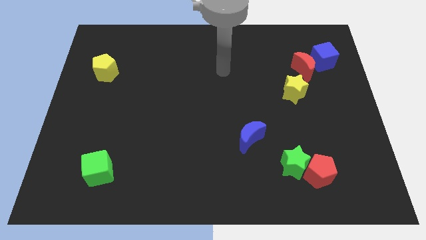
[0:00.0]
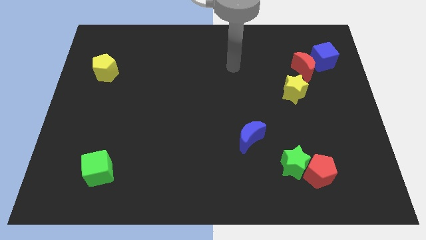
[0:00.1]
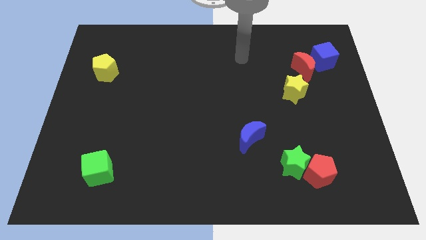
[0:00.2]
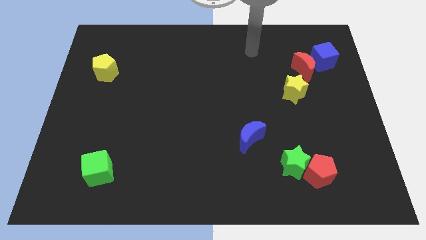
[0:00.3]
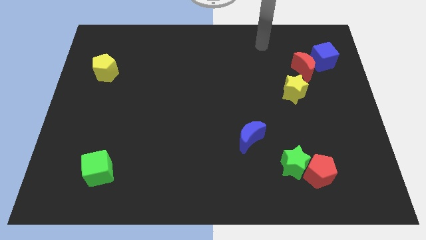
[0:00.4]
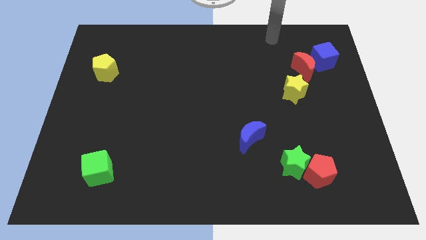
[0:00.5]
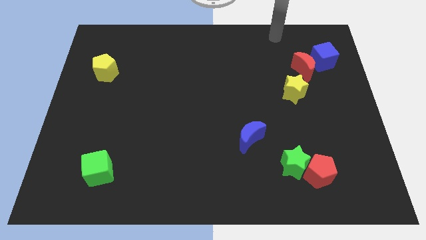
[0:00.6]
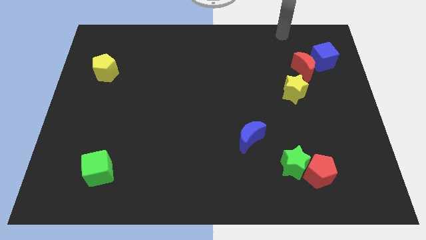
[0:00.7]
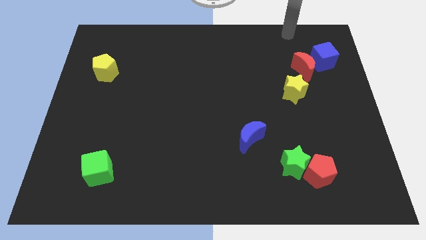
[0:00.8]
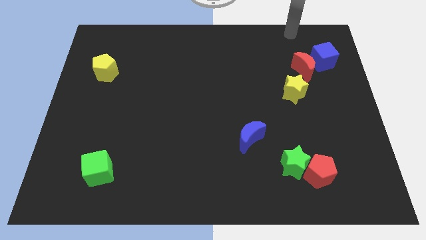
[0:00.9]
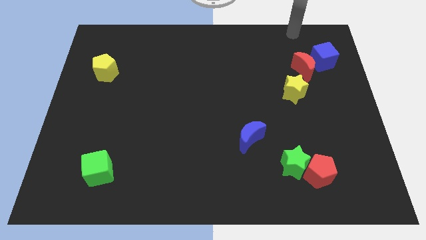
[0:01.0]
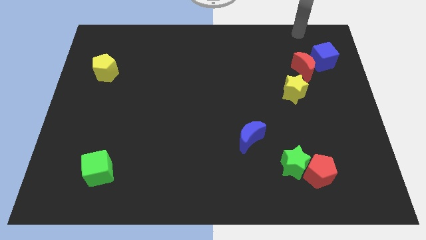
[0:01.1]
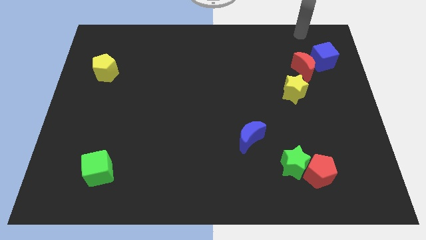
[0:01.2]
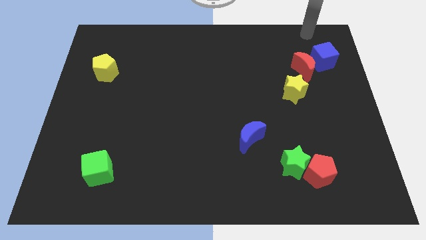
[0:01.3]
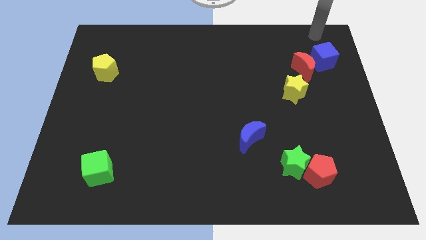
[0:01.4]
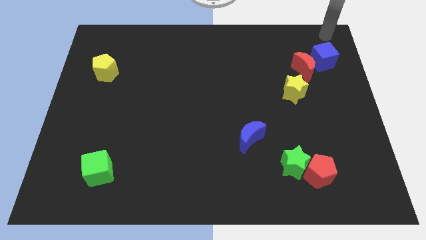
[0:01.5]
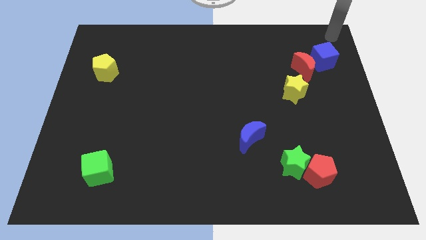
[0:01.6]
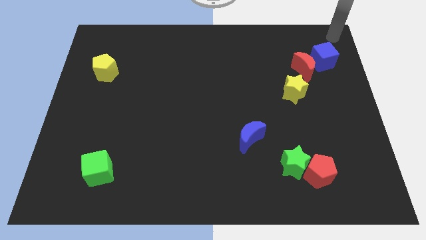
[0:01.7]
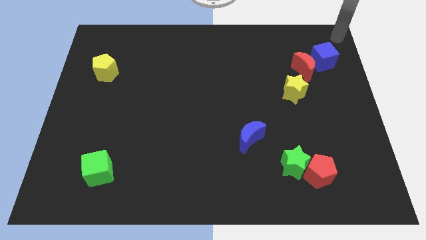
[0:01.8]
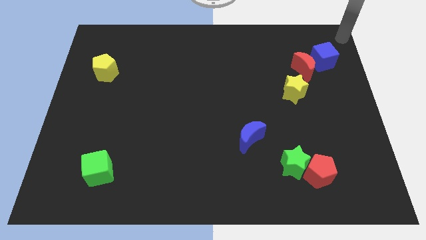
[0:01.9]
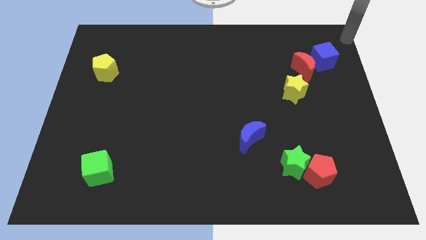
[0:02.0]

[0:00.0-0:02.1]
slide your arm to the top right corner

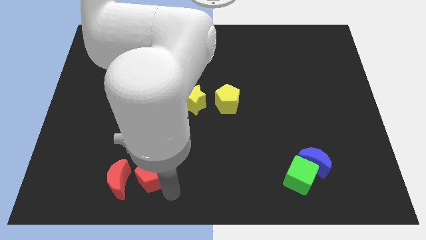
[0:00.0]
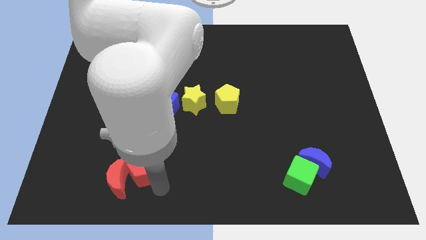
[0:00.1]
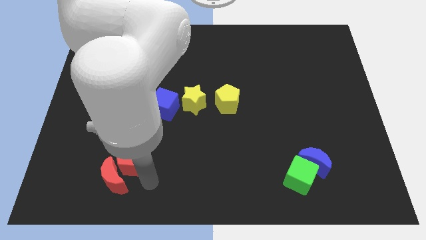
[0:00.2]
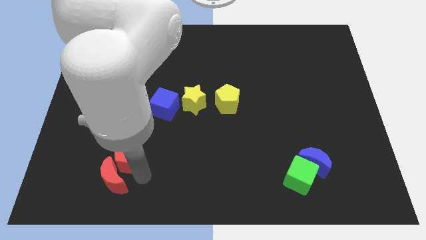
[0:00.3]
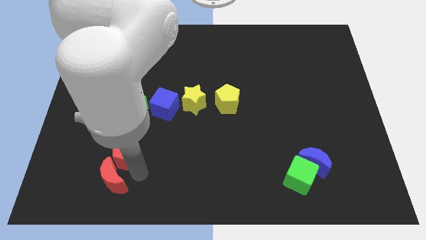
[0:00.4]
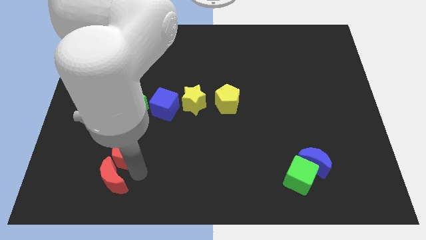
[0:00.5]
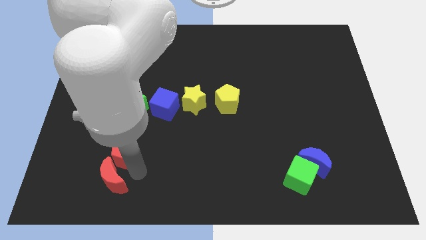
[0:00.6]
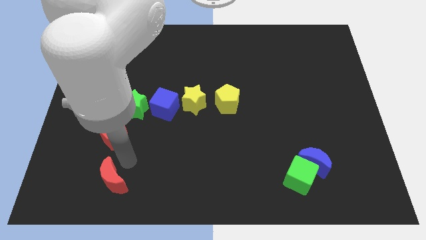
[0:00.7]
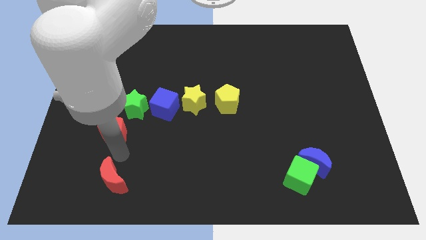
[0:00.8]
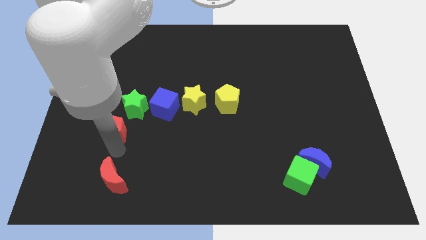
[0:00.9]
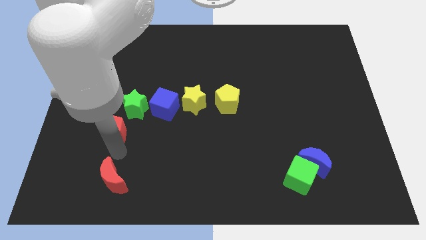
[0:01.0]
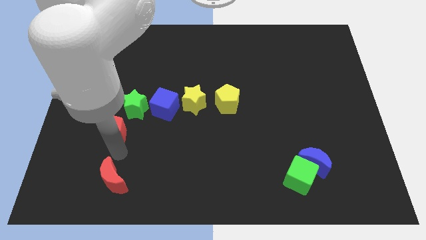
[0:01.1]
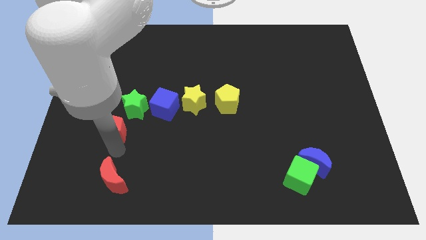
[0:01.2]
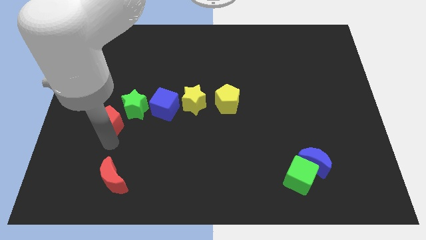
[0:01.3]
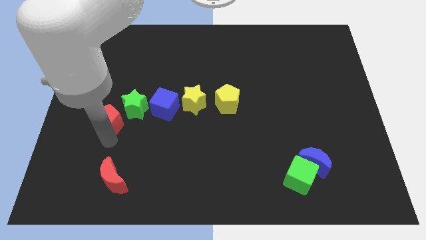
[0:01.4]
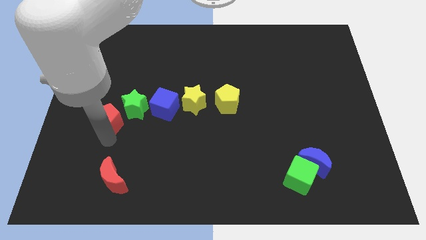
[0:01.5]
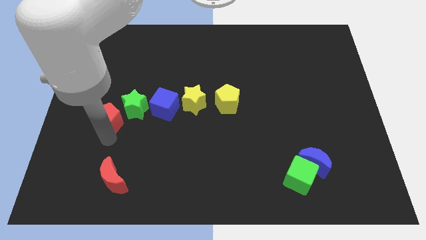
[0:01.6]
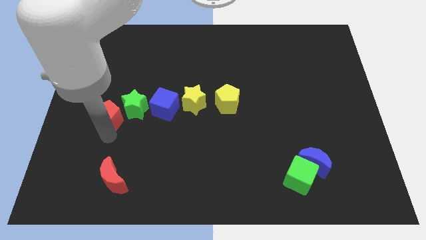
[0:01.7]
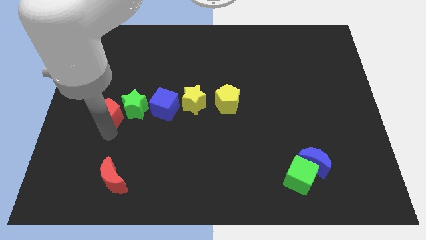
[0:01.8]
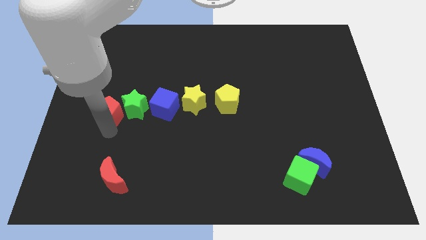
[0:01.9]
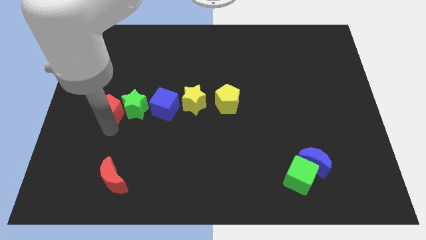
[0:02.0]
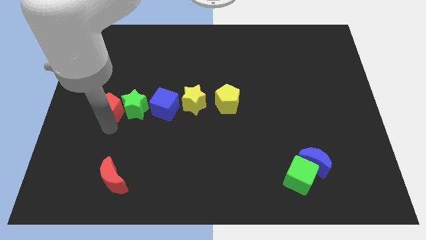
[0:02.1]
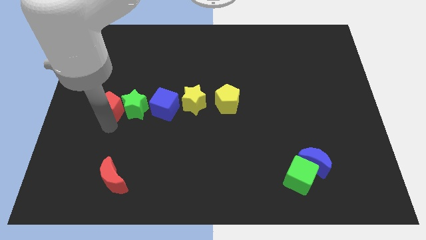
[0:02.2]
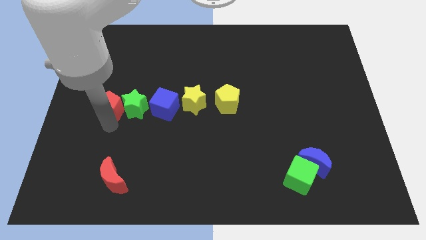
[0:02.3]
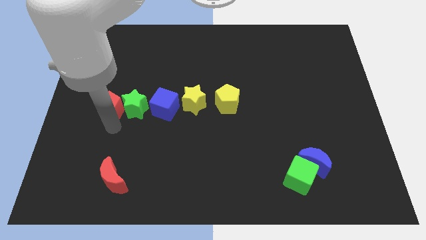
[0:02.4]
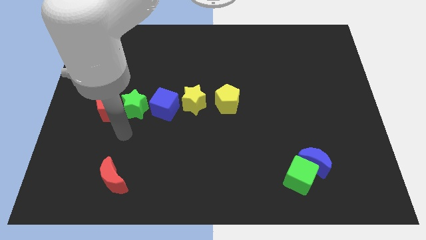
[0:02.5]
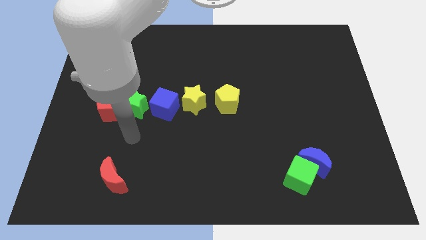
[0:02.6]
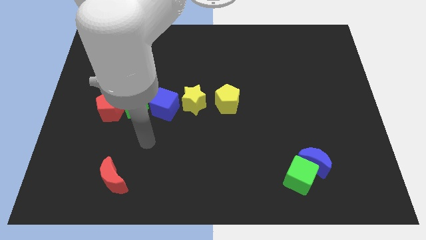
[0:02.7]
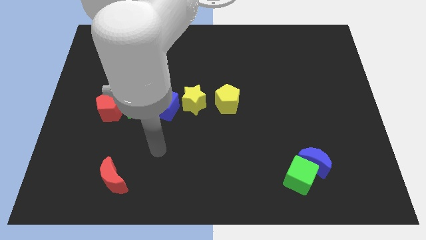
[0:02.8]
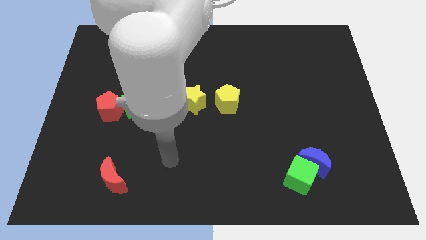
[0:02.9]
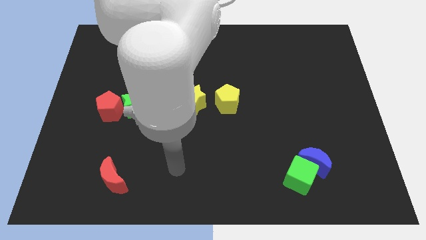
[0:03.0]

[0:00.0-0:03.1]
move the red pentagon left to the green star

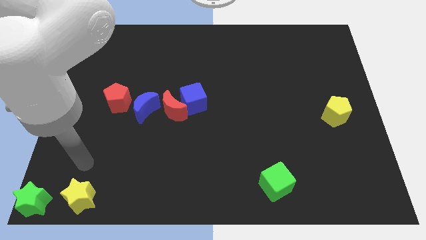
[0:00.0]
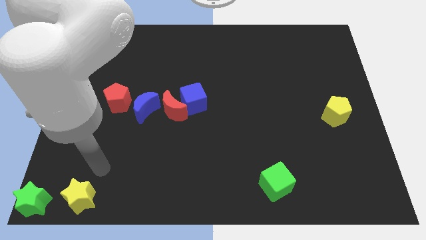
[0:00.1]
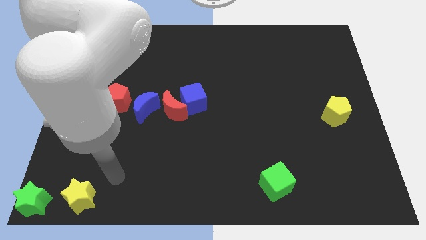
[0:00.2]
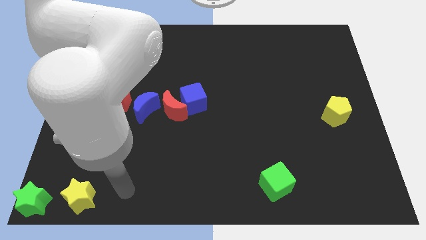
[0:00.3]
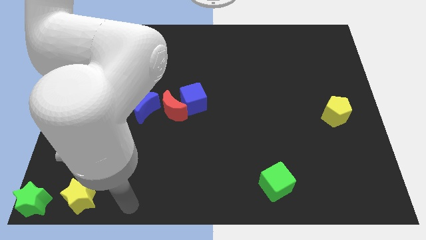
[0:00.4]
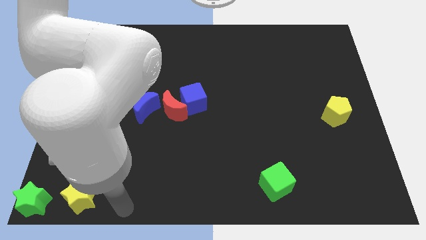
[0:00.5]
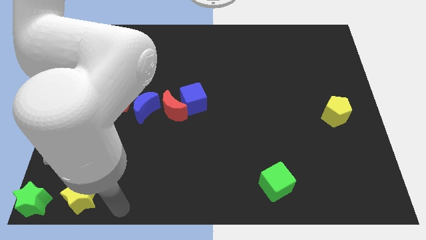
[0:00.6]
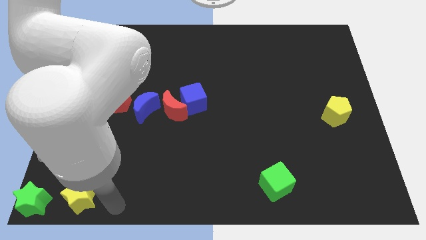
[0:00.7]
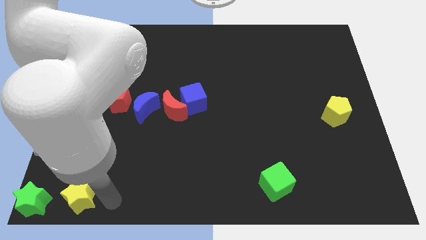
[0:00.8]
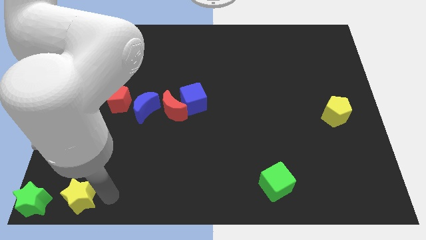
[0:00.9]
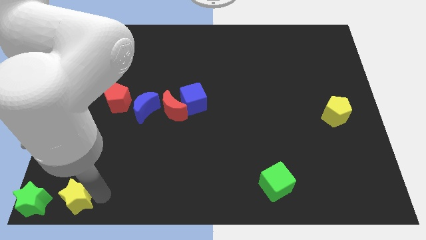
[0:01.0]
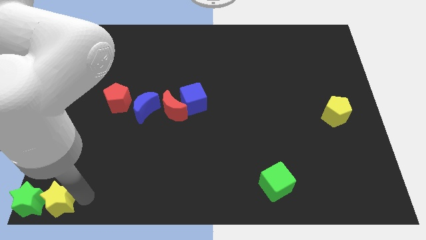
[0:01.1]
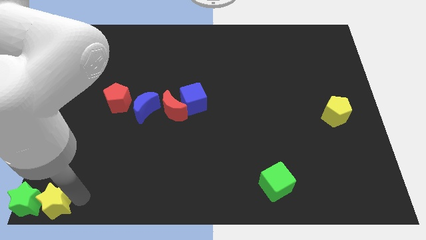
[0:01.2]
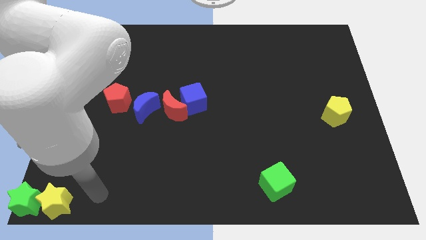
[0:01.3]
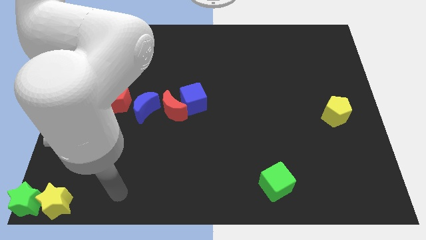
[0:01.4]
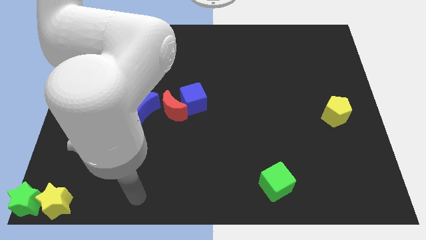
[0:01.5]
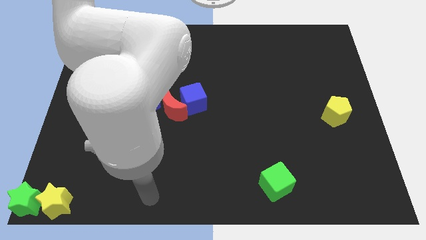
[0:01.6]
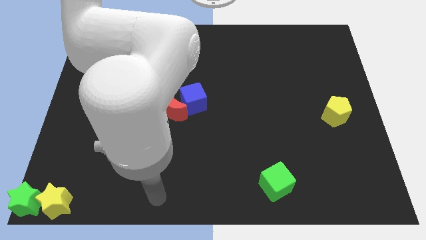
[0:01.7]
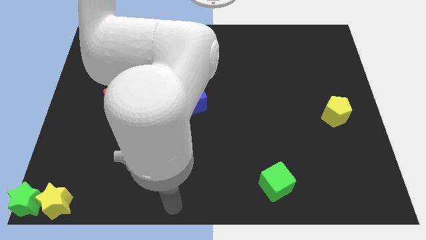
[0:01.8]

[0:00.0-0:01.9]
slide the yellow star into the green star

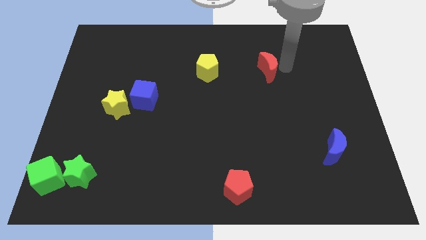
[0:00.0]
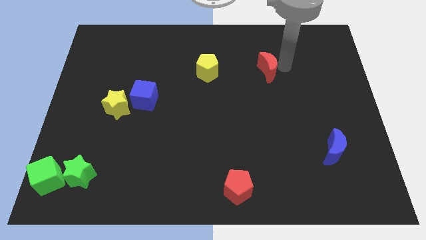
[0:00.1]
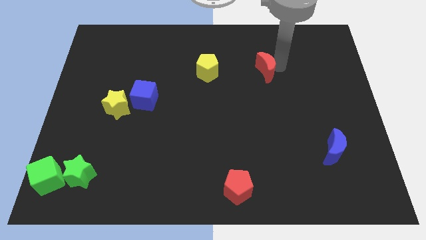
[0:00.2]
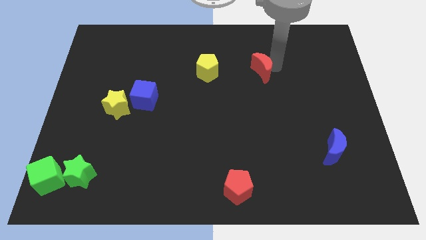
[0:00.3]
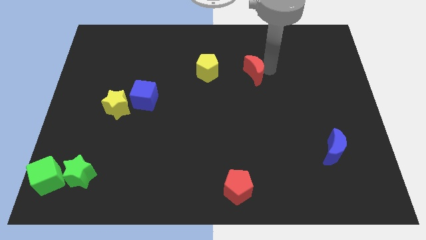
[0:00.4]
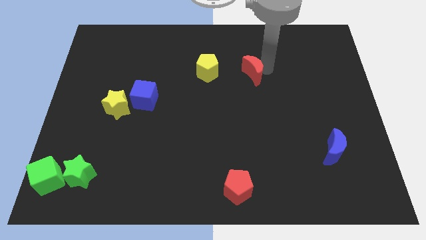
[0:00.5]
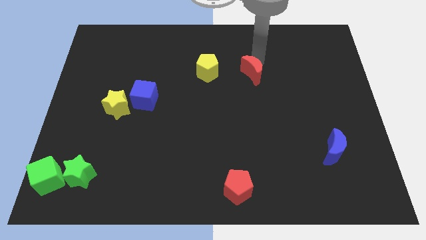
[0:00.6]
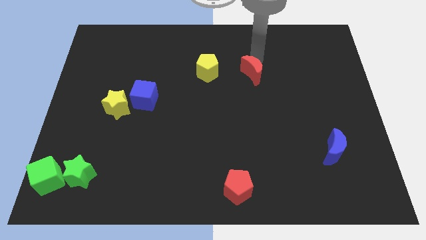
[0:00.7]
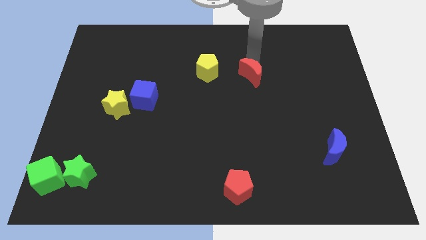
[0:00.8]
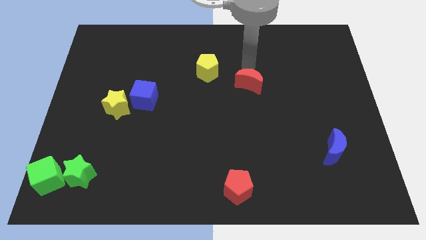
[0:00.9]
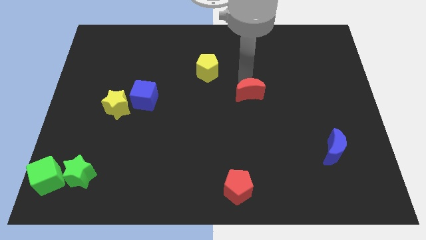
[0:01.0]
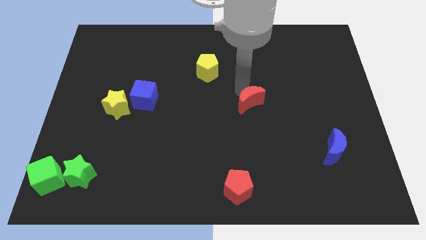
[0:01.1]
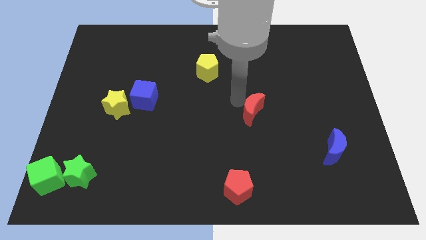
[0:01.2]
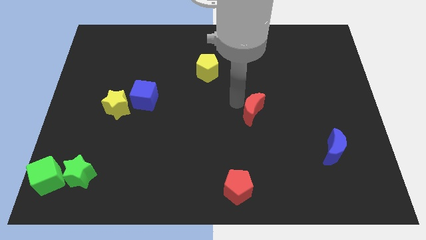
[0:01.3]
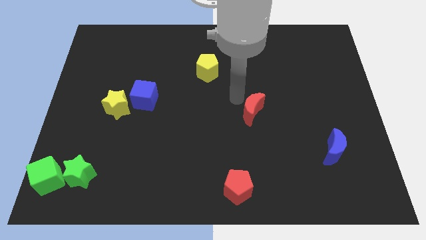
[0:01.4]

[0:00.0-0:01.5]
move red moon to the center of the board
